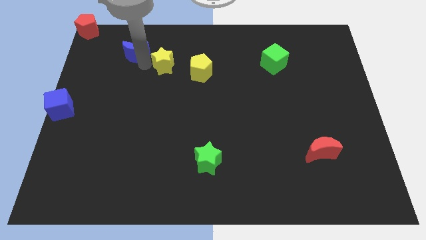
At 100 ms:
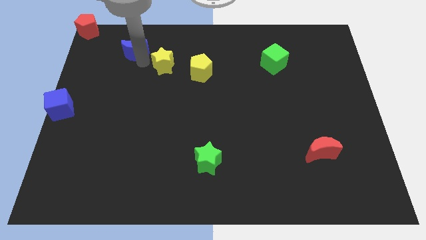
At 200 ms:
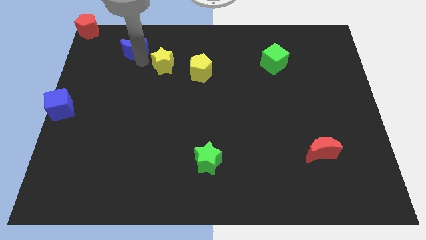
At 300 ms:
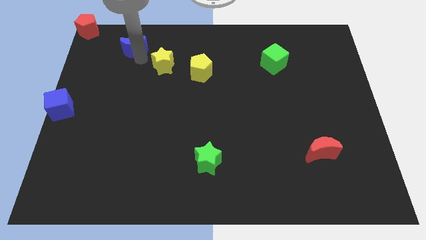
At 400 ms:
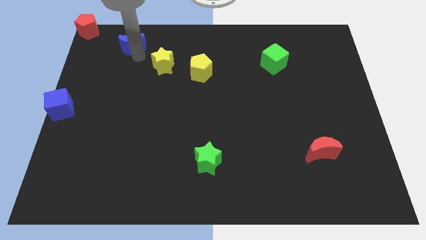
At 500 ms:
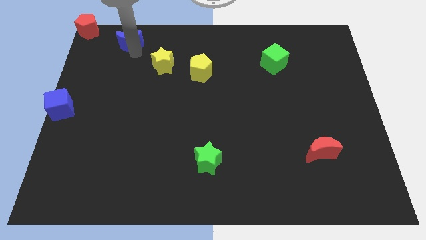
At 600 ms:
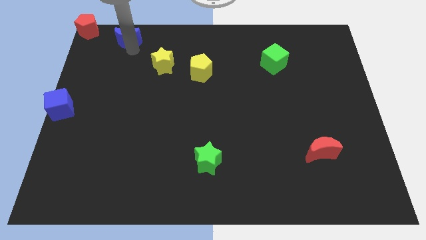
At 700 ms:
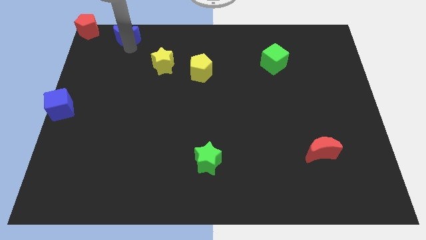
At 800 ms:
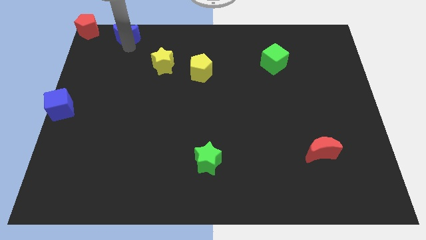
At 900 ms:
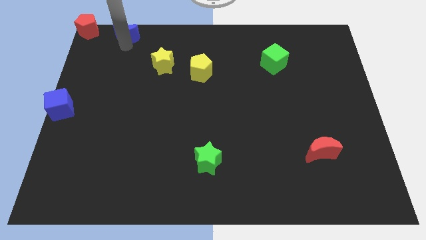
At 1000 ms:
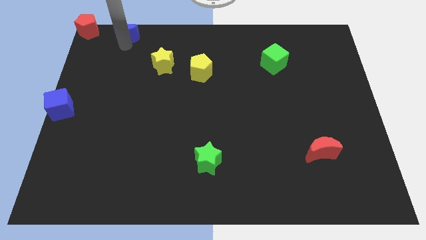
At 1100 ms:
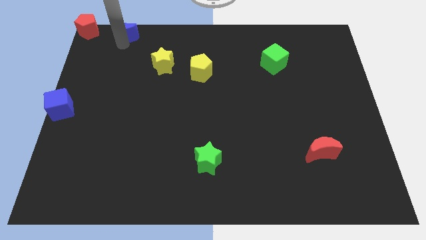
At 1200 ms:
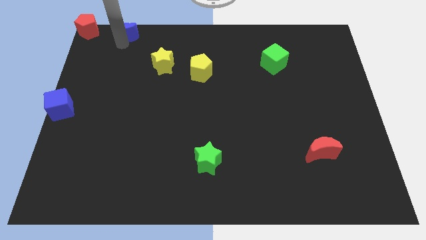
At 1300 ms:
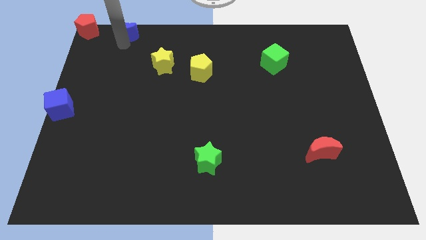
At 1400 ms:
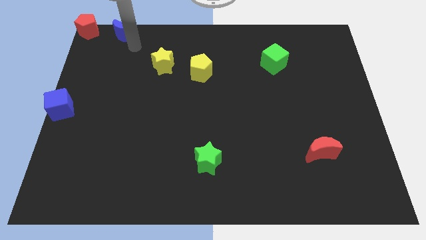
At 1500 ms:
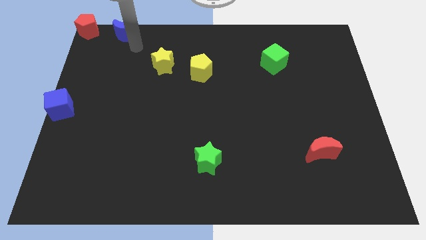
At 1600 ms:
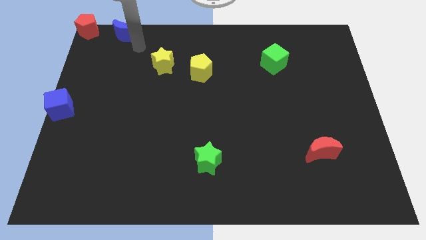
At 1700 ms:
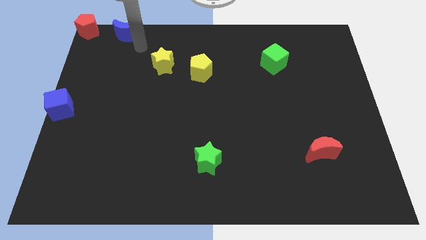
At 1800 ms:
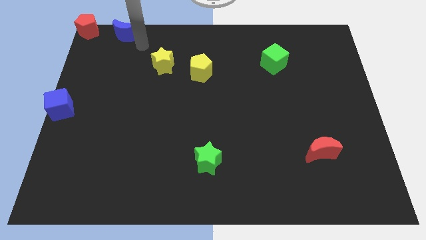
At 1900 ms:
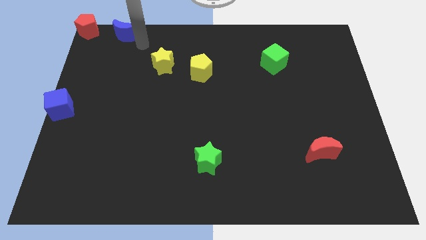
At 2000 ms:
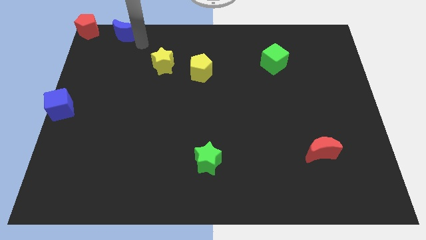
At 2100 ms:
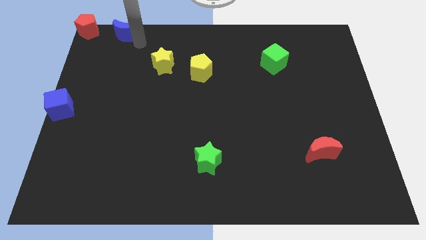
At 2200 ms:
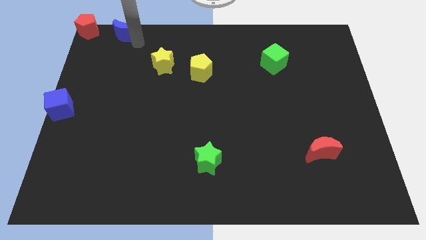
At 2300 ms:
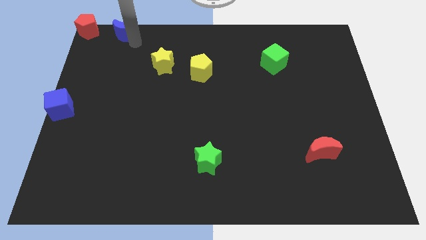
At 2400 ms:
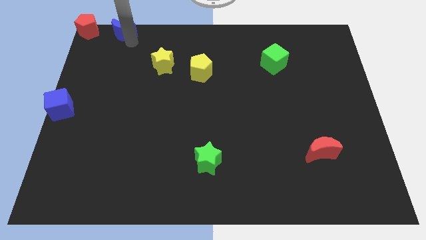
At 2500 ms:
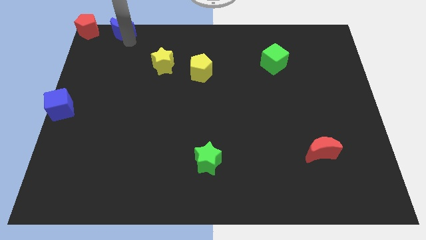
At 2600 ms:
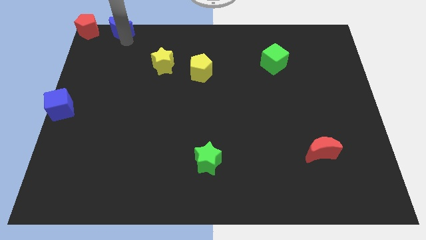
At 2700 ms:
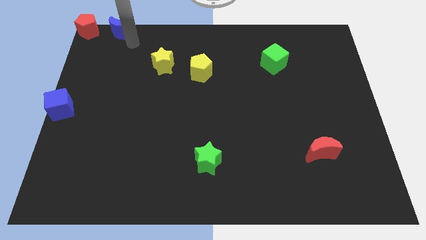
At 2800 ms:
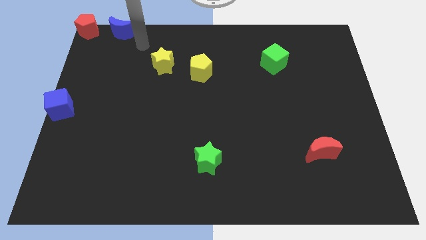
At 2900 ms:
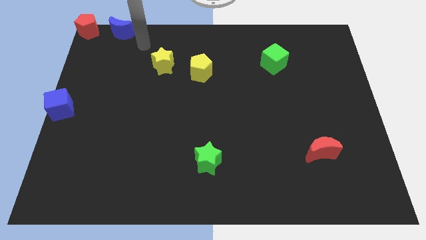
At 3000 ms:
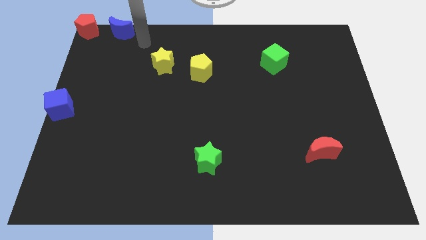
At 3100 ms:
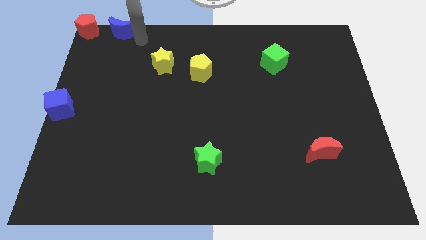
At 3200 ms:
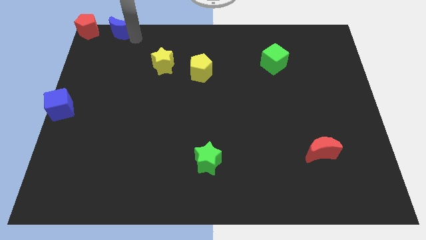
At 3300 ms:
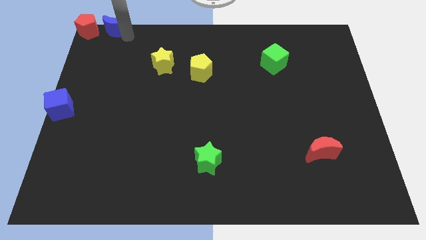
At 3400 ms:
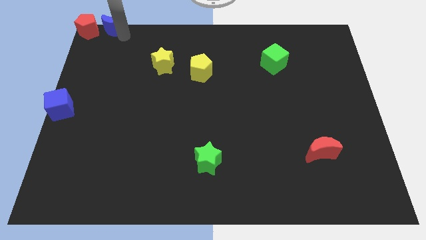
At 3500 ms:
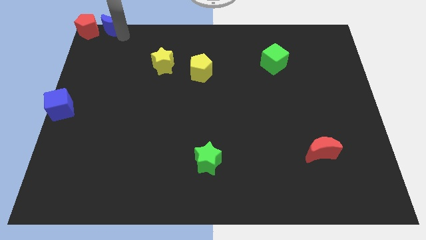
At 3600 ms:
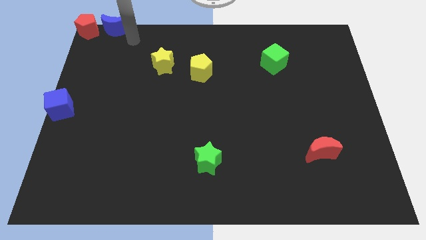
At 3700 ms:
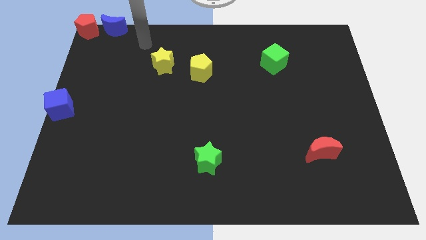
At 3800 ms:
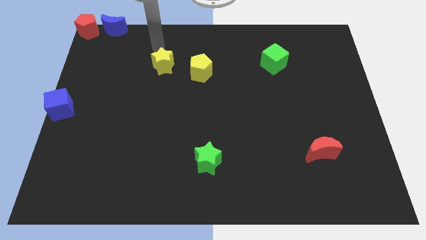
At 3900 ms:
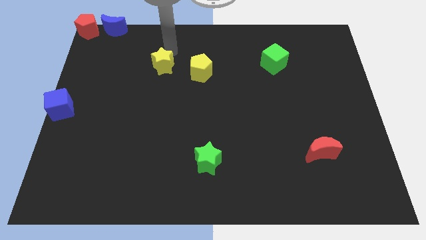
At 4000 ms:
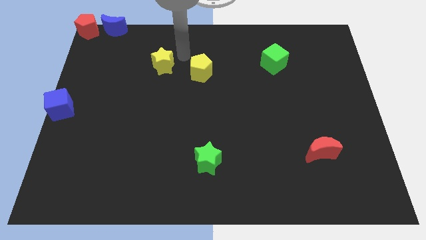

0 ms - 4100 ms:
place the blue crescent right to the red pentagon

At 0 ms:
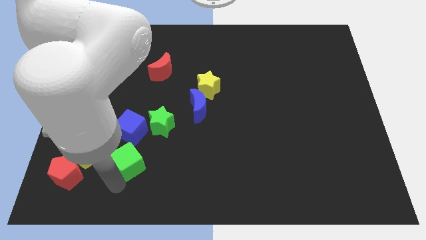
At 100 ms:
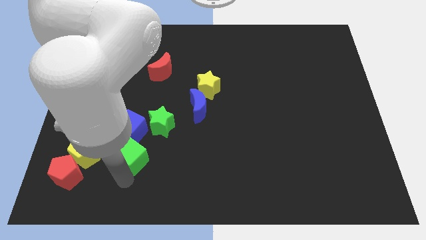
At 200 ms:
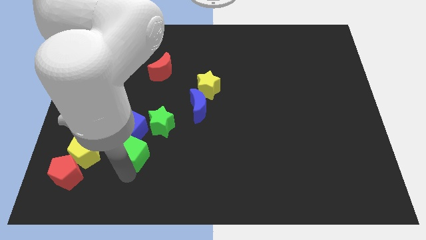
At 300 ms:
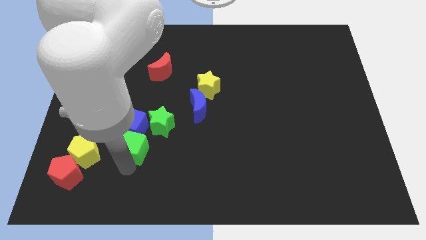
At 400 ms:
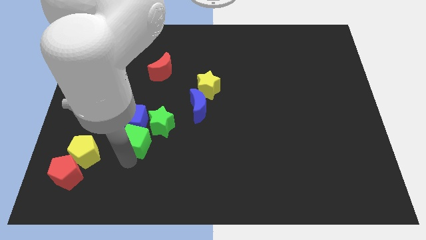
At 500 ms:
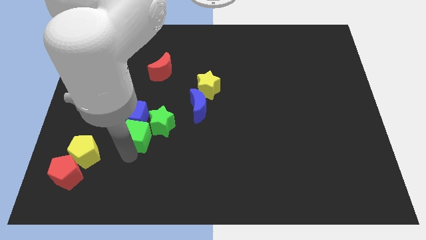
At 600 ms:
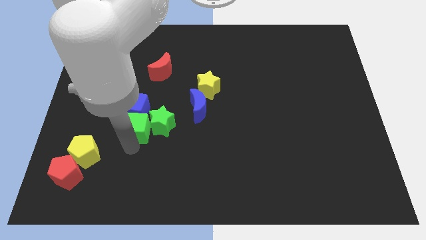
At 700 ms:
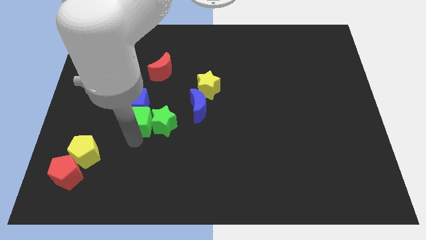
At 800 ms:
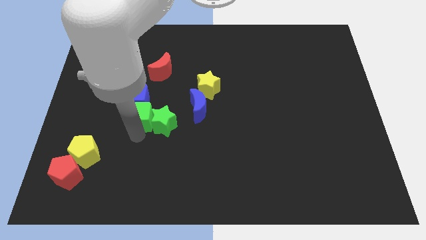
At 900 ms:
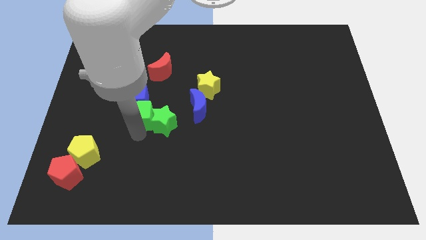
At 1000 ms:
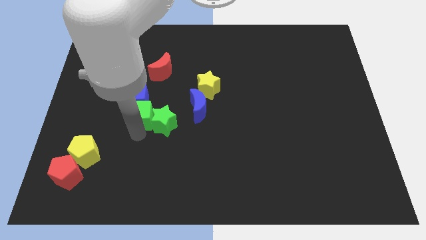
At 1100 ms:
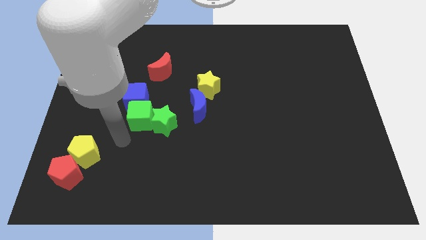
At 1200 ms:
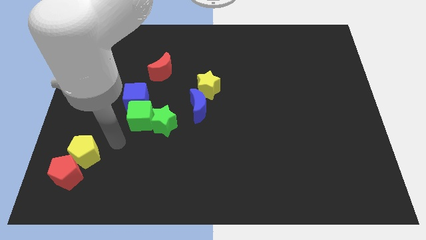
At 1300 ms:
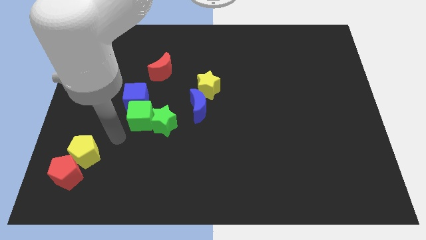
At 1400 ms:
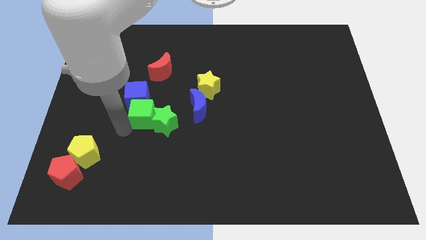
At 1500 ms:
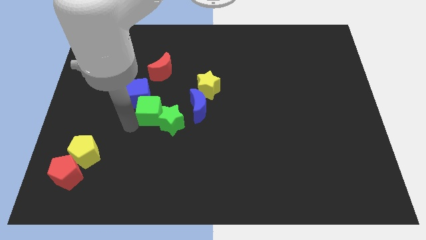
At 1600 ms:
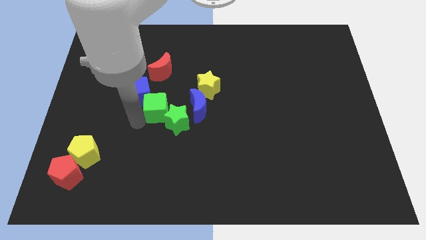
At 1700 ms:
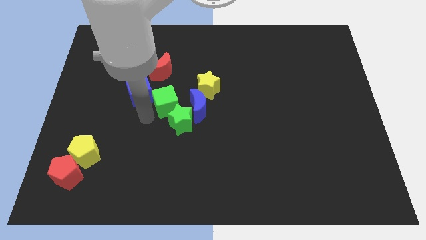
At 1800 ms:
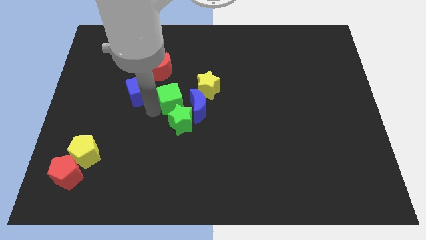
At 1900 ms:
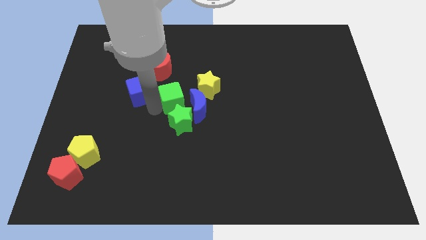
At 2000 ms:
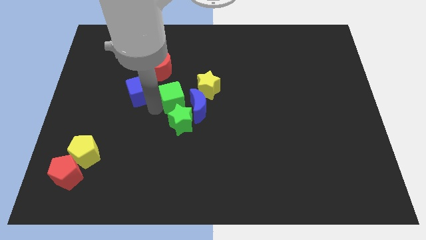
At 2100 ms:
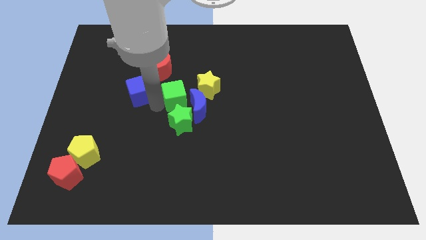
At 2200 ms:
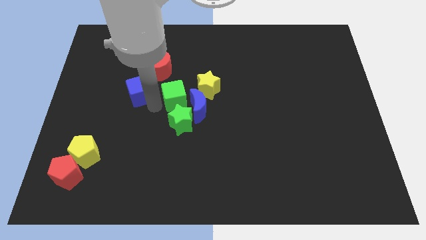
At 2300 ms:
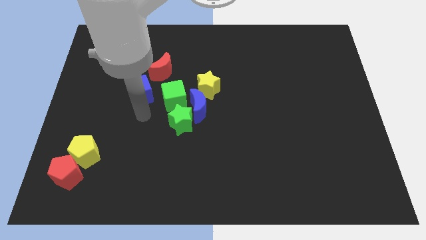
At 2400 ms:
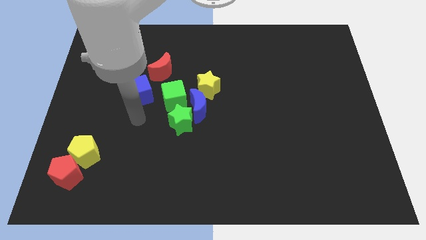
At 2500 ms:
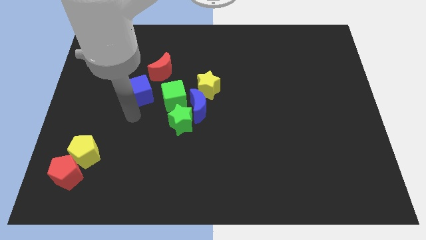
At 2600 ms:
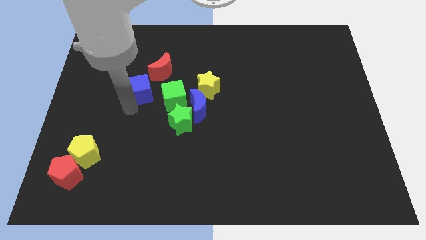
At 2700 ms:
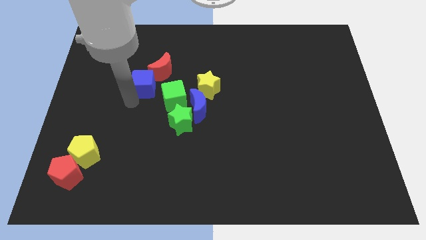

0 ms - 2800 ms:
place green cube above green star

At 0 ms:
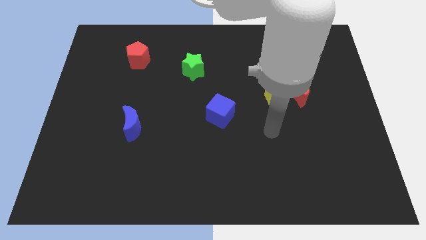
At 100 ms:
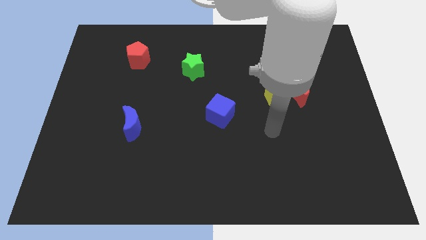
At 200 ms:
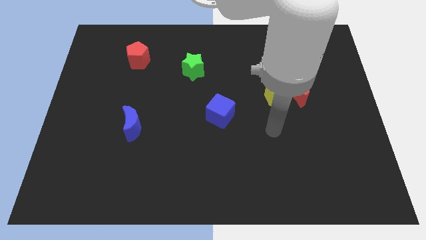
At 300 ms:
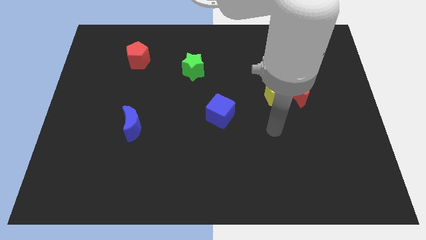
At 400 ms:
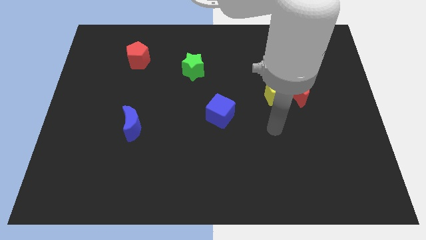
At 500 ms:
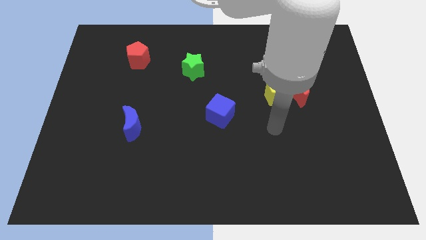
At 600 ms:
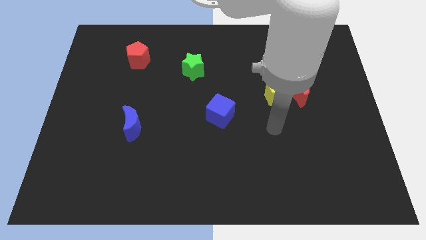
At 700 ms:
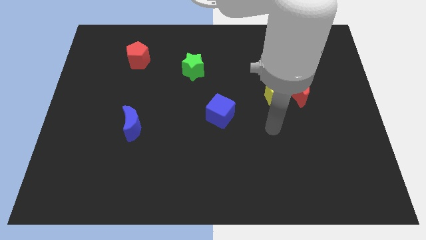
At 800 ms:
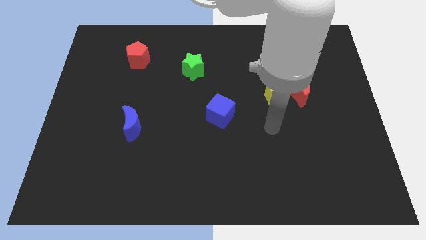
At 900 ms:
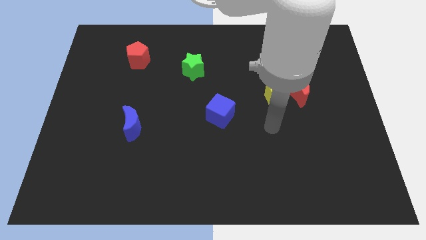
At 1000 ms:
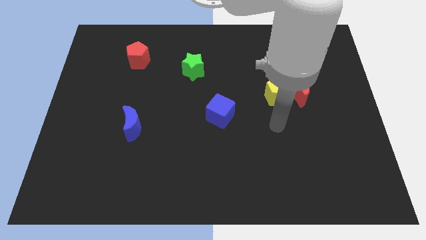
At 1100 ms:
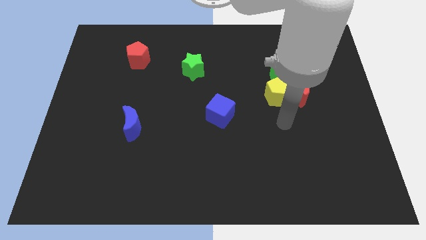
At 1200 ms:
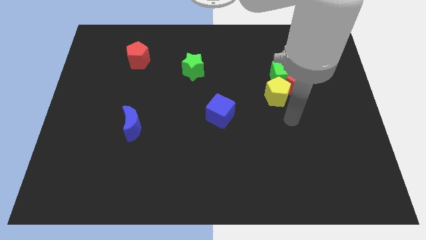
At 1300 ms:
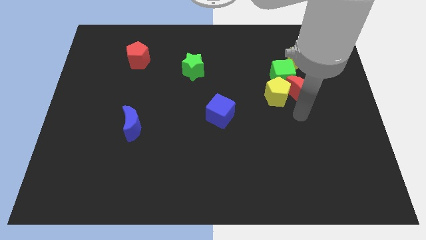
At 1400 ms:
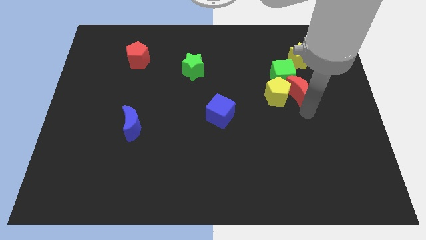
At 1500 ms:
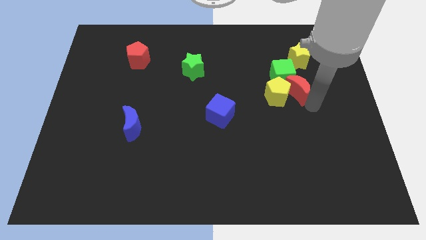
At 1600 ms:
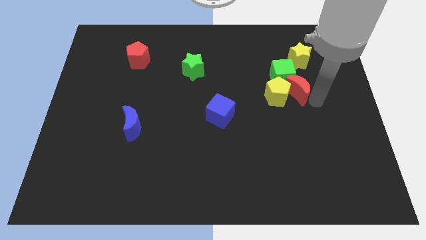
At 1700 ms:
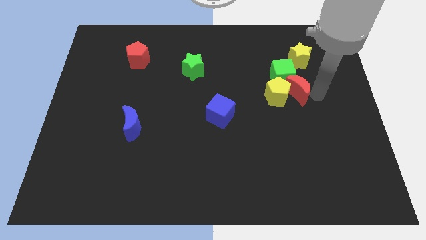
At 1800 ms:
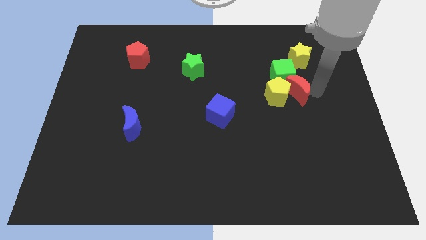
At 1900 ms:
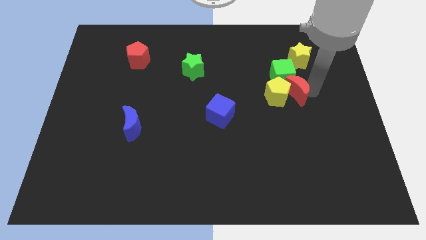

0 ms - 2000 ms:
go to the right side of the red crescent
